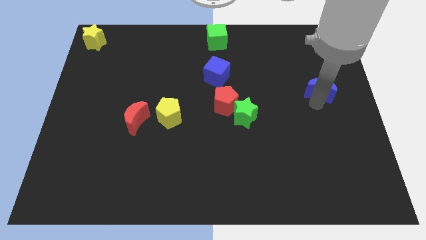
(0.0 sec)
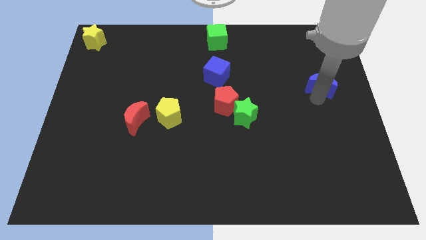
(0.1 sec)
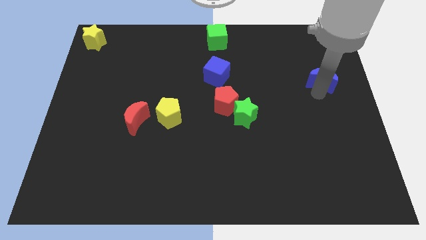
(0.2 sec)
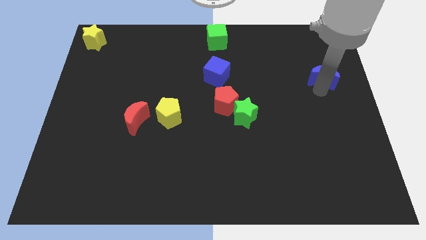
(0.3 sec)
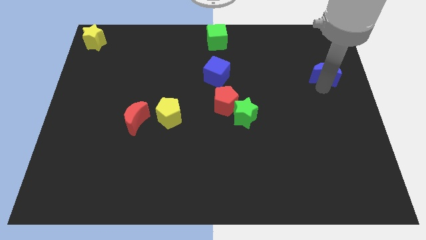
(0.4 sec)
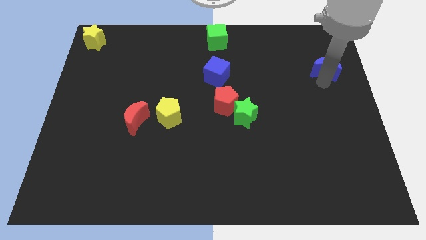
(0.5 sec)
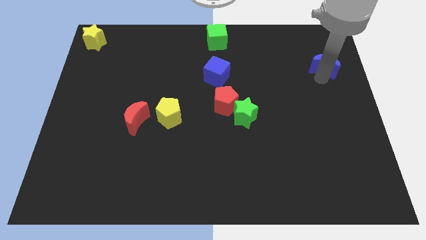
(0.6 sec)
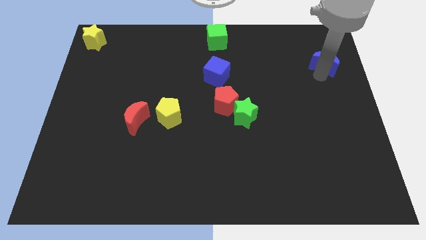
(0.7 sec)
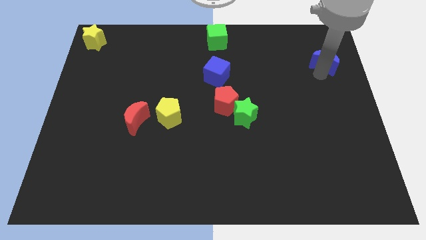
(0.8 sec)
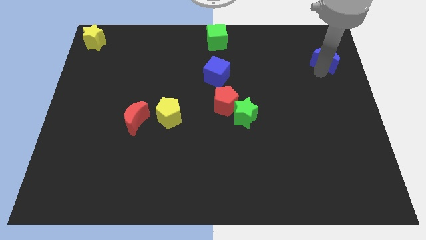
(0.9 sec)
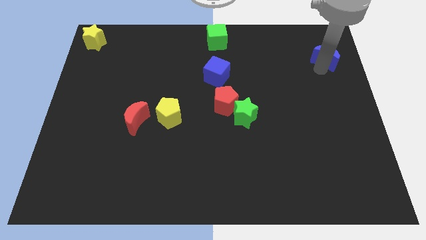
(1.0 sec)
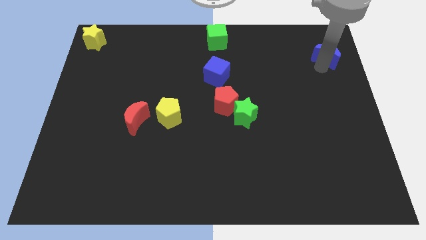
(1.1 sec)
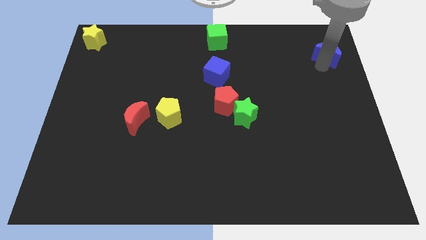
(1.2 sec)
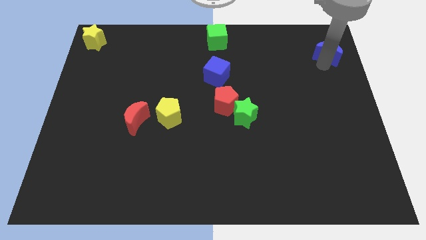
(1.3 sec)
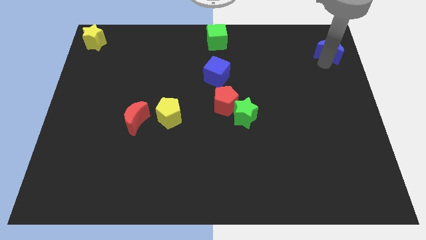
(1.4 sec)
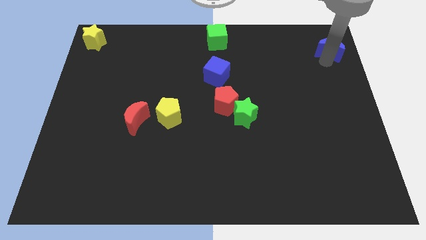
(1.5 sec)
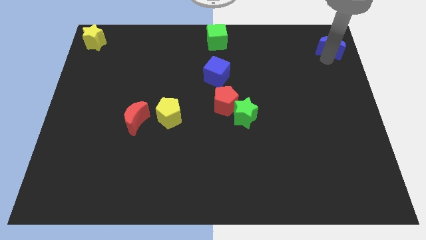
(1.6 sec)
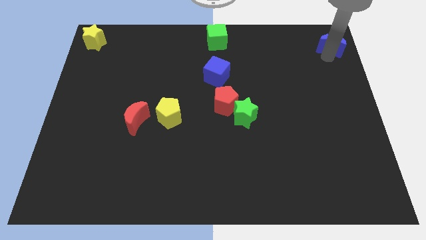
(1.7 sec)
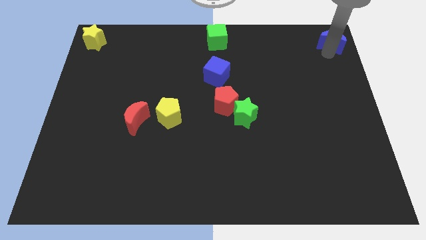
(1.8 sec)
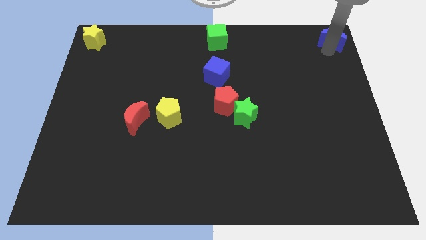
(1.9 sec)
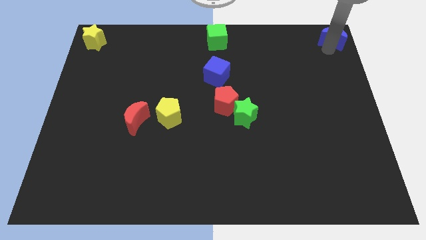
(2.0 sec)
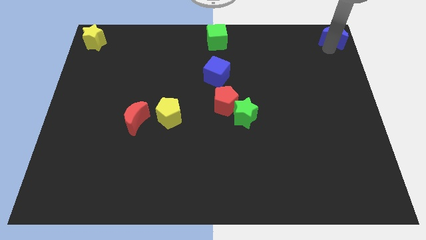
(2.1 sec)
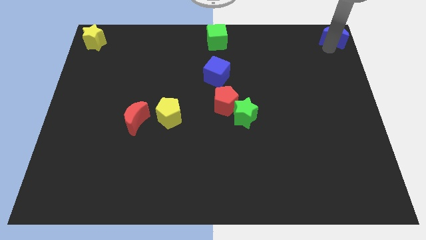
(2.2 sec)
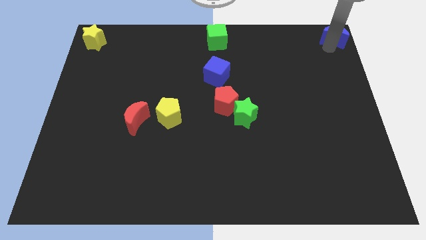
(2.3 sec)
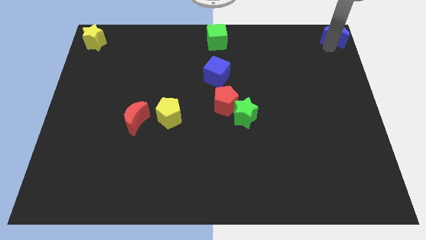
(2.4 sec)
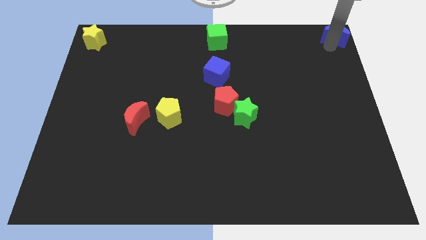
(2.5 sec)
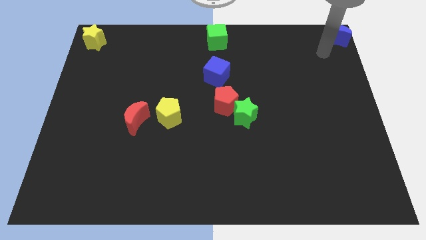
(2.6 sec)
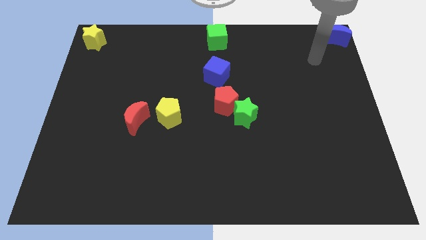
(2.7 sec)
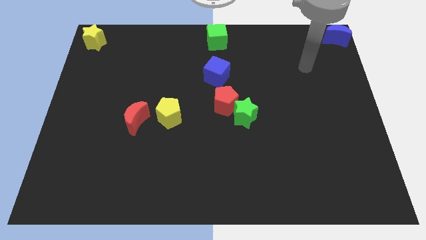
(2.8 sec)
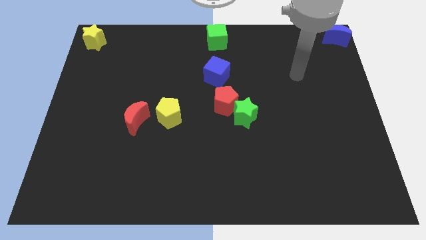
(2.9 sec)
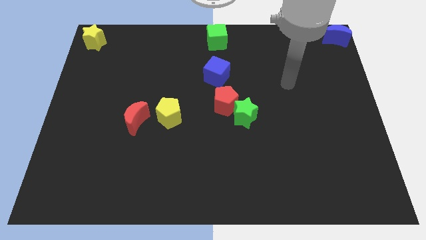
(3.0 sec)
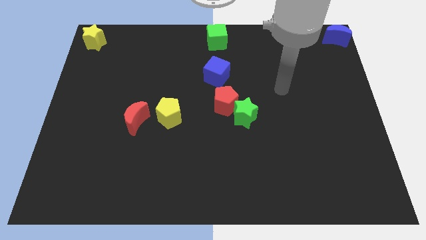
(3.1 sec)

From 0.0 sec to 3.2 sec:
place the blue moon to the top right corner of the board

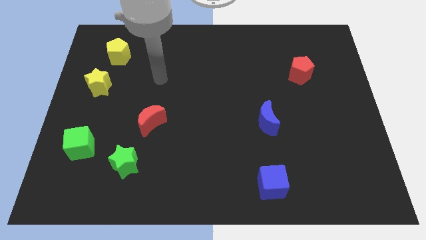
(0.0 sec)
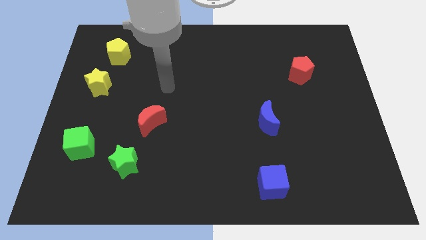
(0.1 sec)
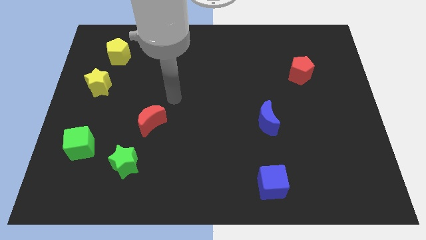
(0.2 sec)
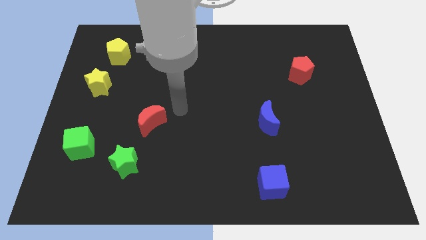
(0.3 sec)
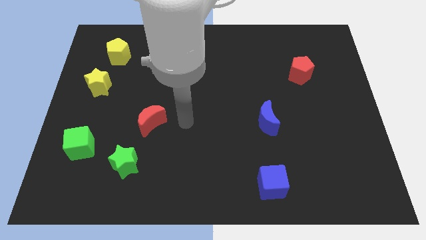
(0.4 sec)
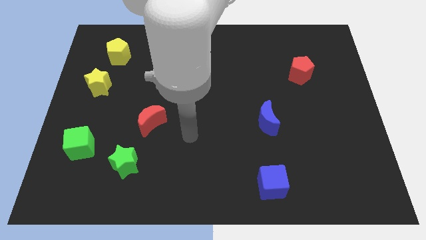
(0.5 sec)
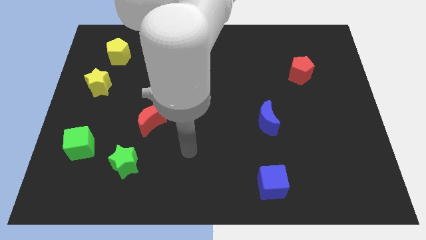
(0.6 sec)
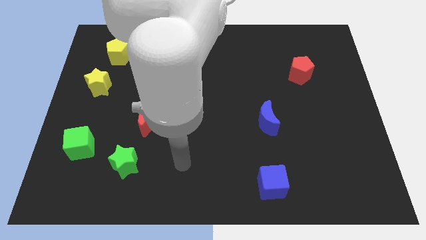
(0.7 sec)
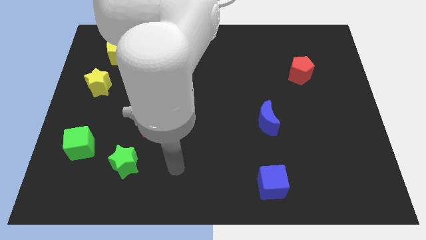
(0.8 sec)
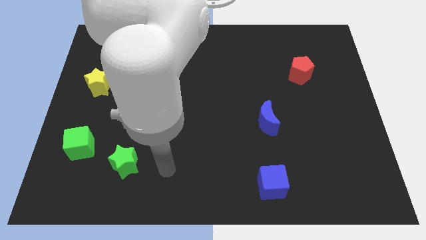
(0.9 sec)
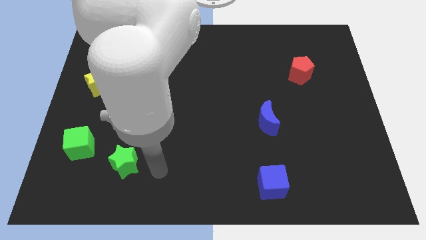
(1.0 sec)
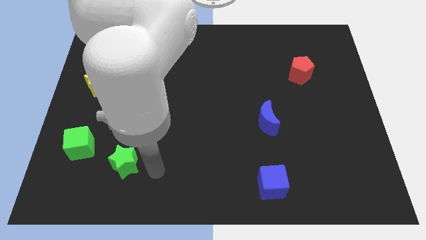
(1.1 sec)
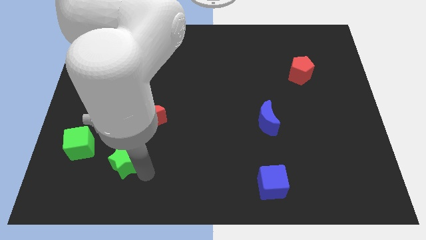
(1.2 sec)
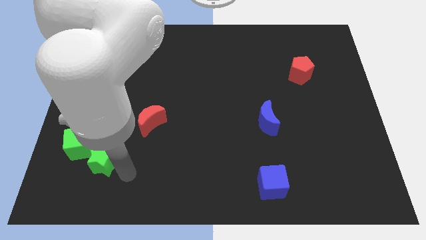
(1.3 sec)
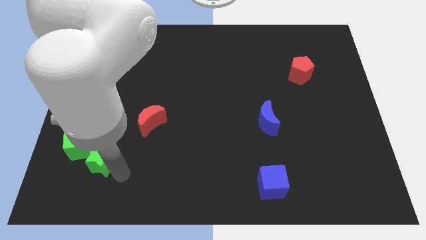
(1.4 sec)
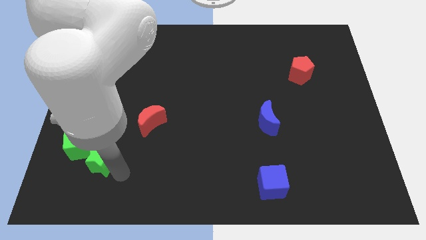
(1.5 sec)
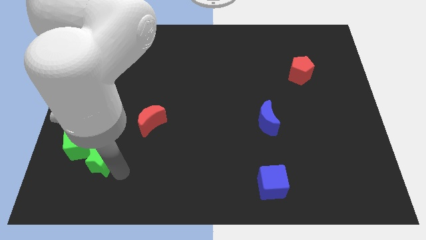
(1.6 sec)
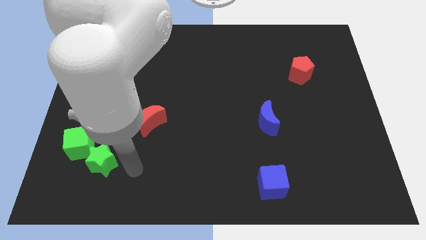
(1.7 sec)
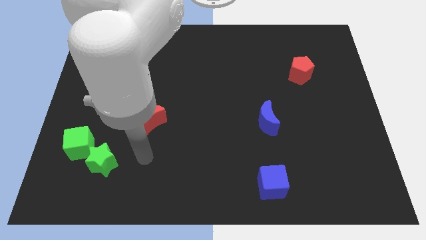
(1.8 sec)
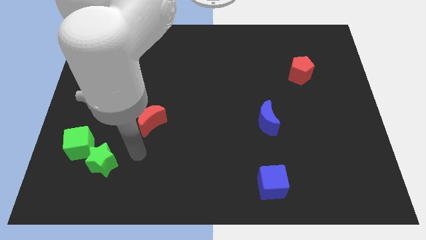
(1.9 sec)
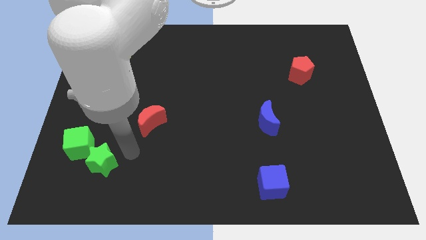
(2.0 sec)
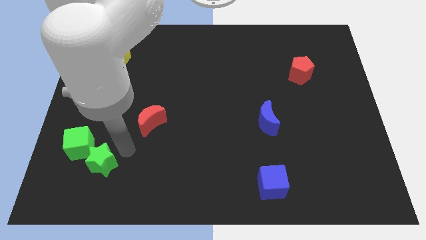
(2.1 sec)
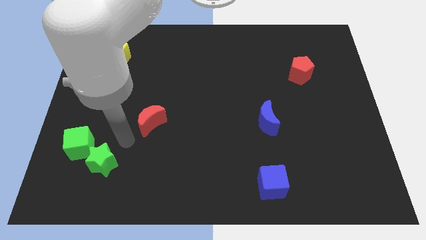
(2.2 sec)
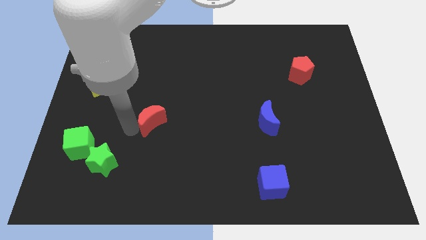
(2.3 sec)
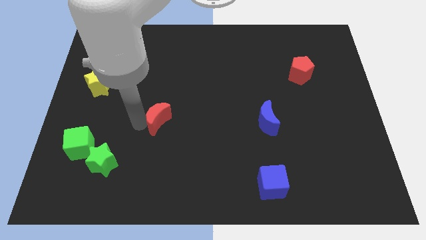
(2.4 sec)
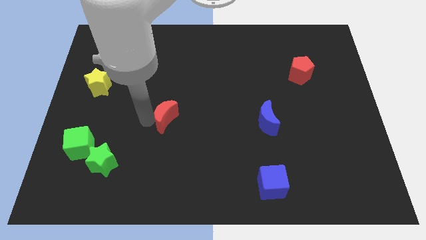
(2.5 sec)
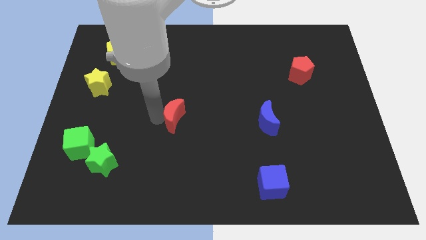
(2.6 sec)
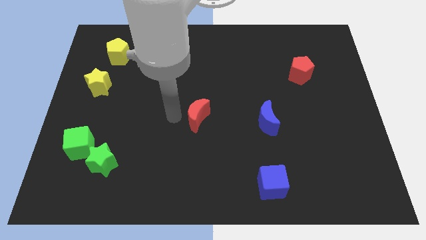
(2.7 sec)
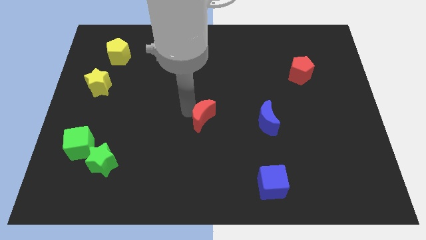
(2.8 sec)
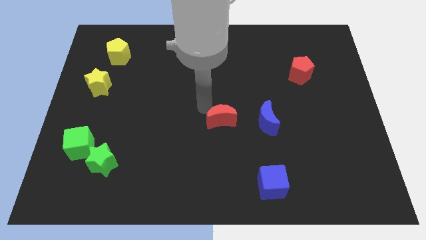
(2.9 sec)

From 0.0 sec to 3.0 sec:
move green star to the bottom right of green cube

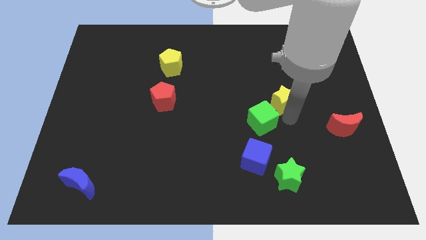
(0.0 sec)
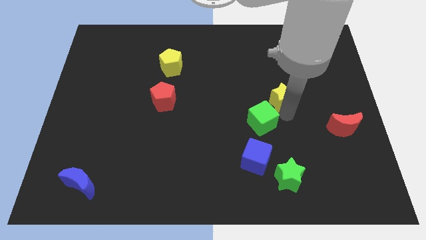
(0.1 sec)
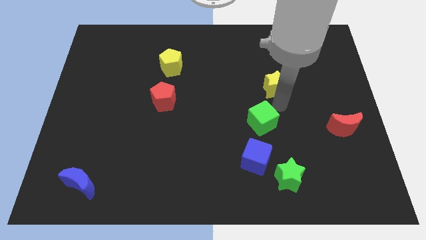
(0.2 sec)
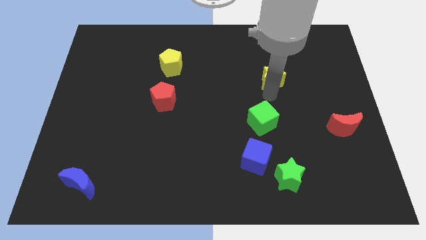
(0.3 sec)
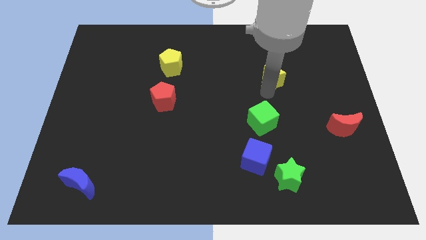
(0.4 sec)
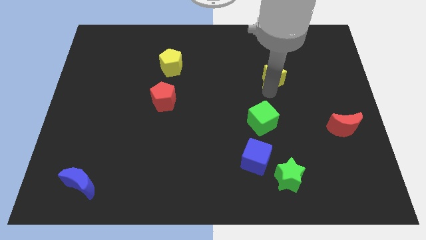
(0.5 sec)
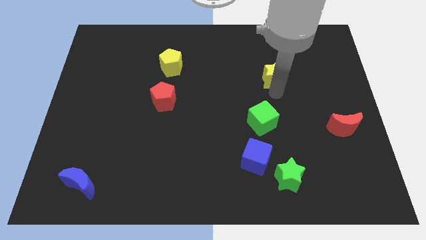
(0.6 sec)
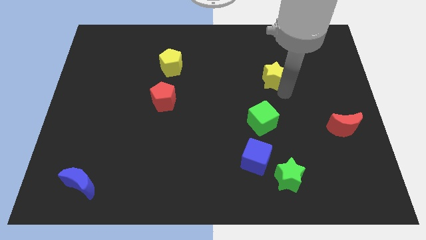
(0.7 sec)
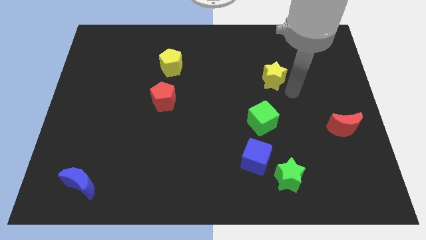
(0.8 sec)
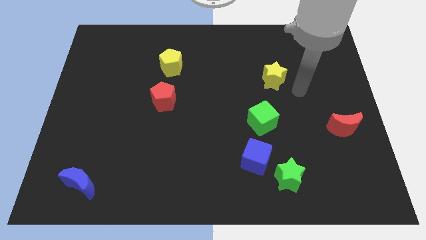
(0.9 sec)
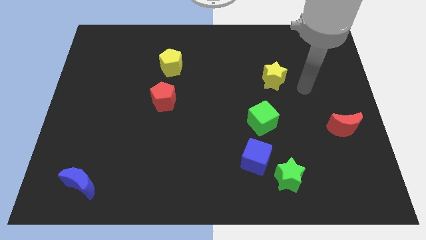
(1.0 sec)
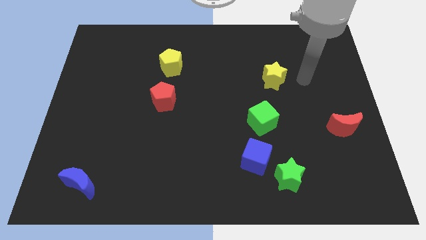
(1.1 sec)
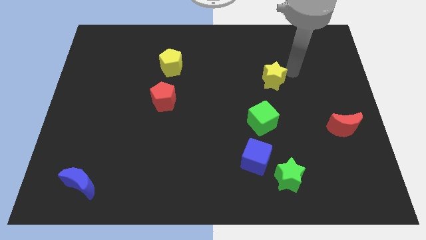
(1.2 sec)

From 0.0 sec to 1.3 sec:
move yellow star vertically above green cube

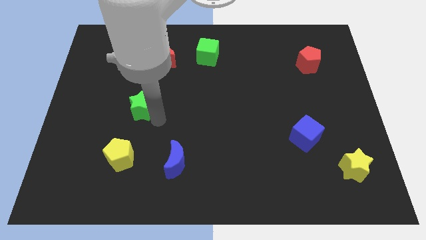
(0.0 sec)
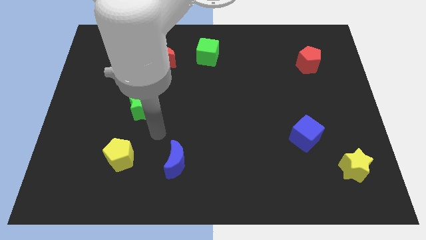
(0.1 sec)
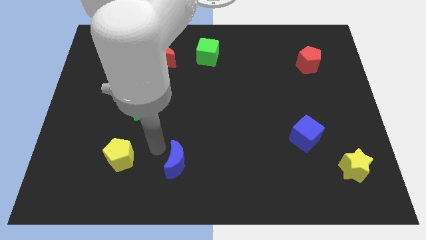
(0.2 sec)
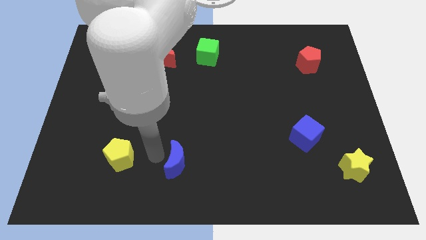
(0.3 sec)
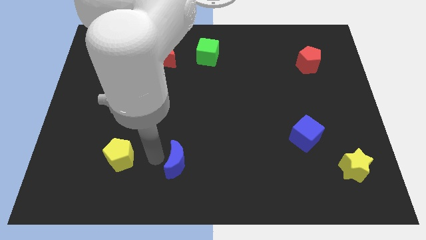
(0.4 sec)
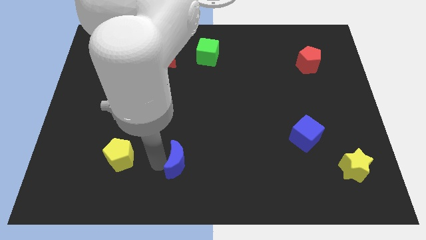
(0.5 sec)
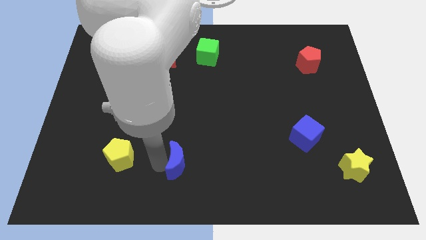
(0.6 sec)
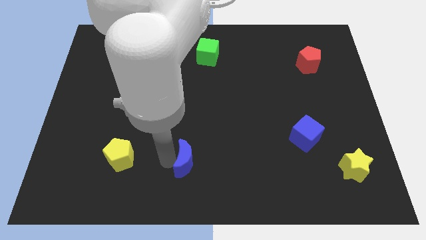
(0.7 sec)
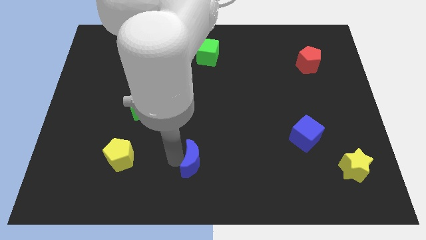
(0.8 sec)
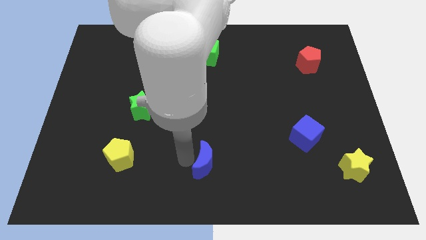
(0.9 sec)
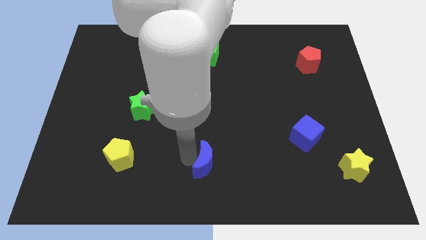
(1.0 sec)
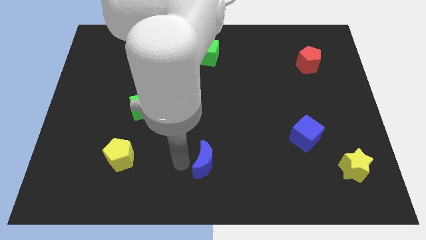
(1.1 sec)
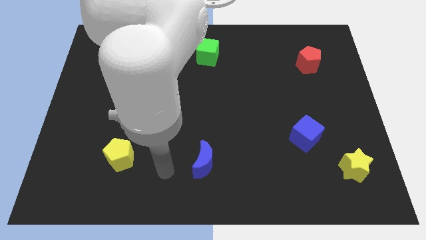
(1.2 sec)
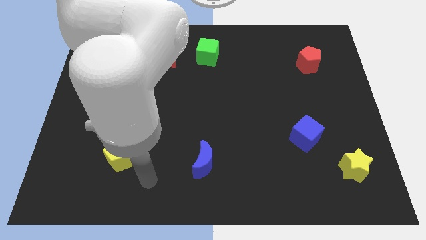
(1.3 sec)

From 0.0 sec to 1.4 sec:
push the blue crescent slightly to the right
